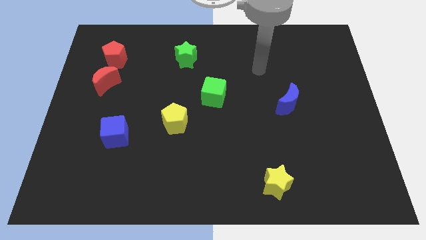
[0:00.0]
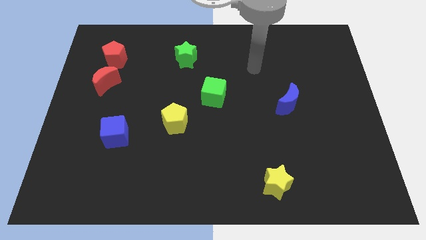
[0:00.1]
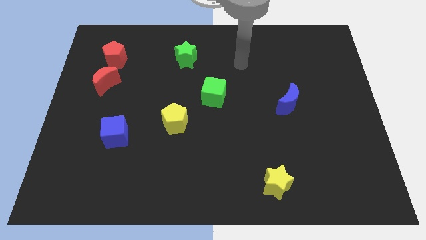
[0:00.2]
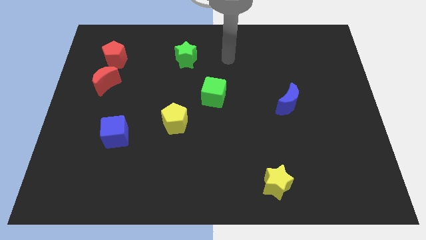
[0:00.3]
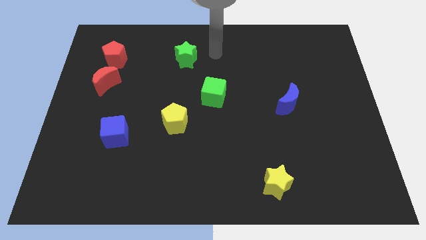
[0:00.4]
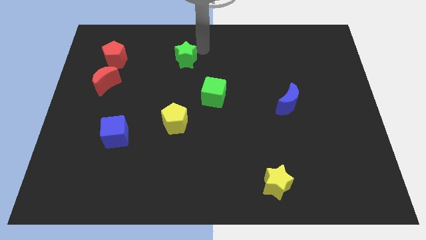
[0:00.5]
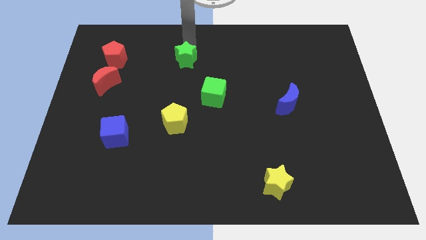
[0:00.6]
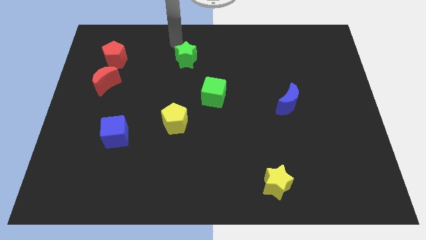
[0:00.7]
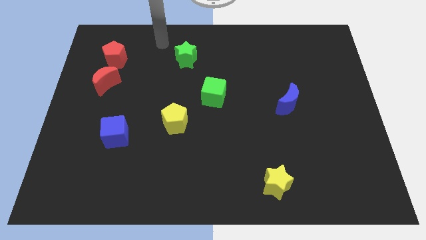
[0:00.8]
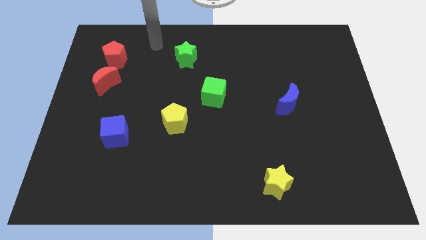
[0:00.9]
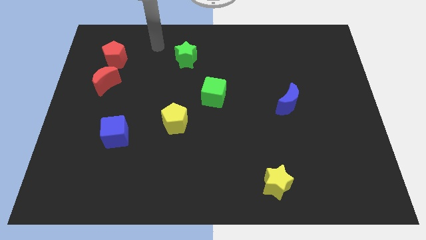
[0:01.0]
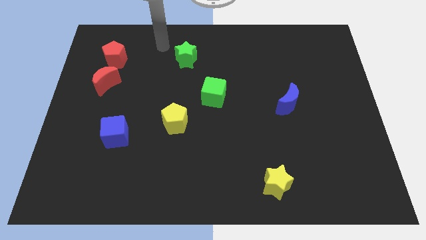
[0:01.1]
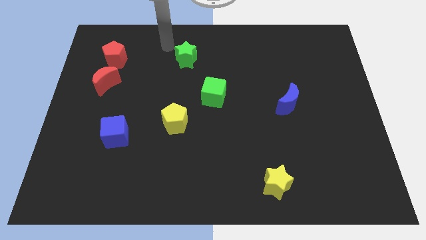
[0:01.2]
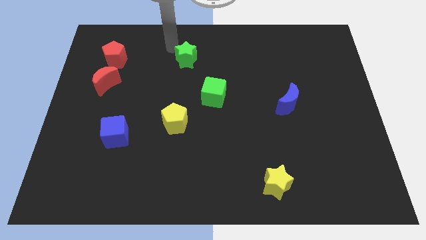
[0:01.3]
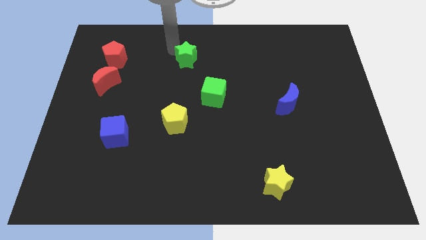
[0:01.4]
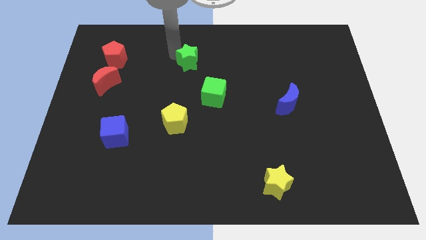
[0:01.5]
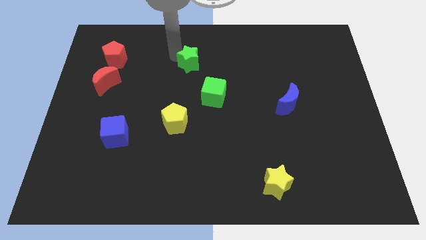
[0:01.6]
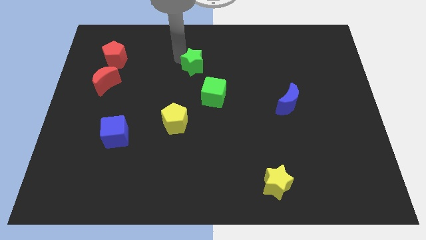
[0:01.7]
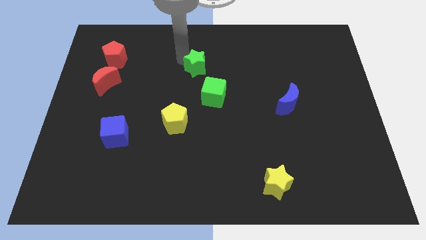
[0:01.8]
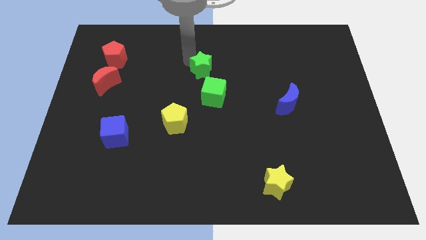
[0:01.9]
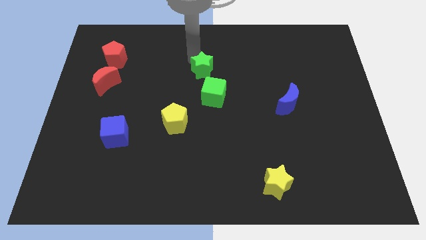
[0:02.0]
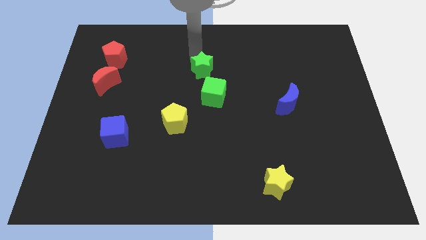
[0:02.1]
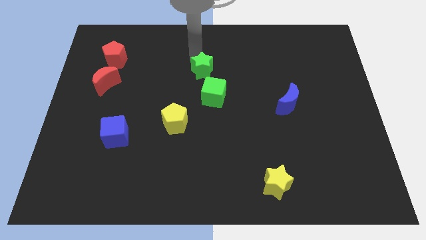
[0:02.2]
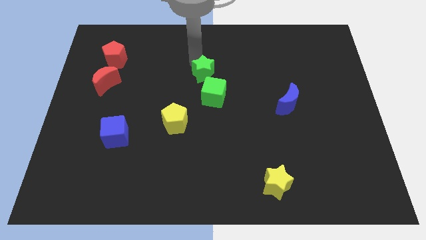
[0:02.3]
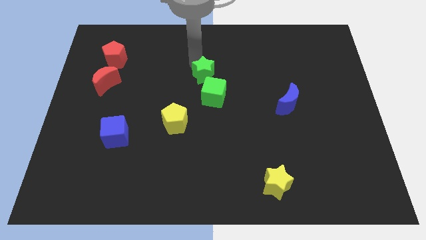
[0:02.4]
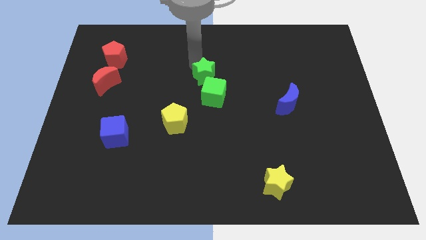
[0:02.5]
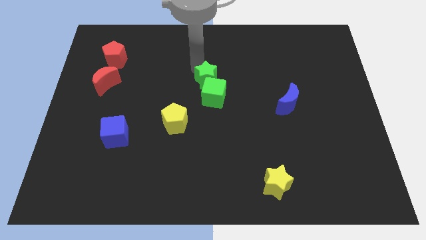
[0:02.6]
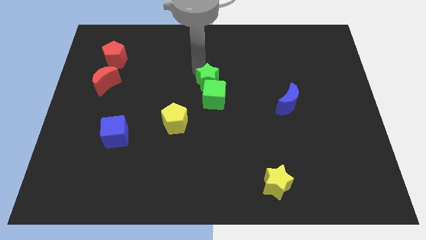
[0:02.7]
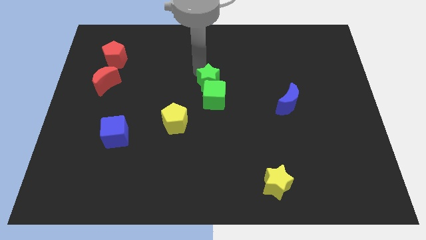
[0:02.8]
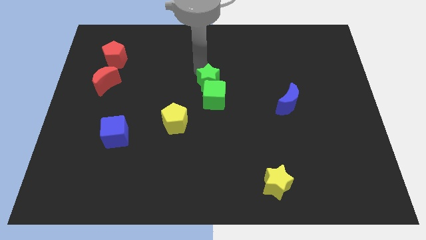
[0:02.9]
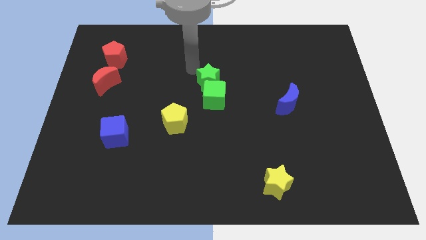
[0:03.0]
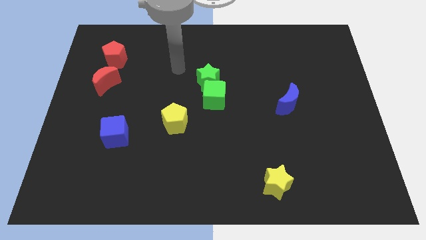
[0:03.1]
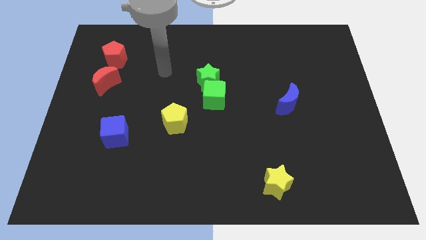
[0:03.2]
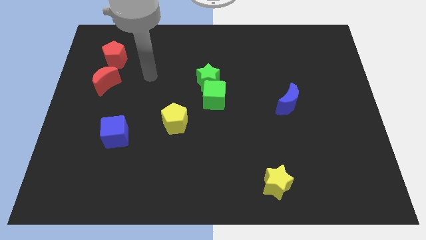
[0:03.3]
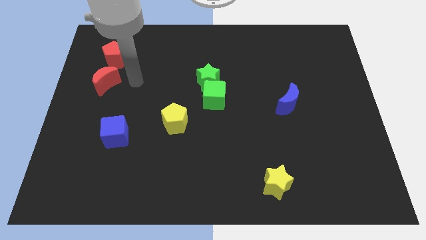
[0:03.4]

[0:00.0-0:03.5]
place green star to the top of green cube

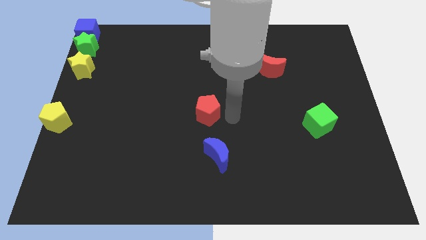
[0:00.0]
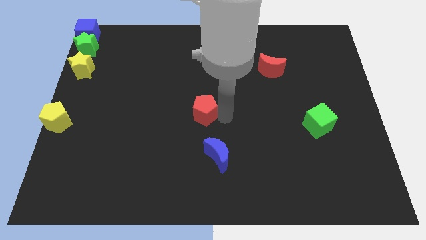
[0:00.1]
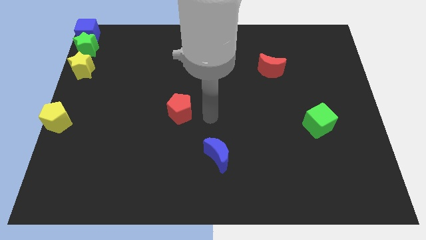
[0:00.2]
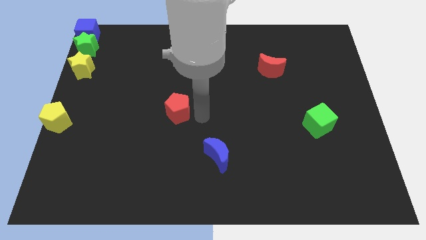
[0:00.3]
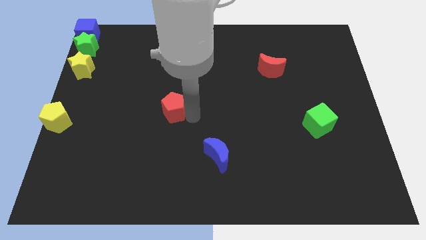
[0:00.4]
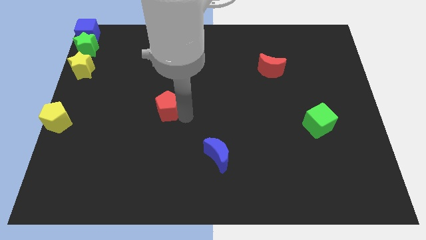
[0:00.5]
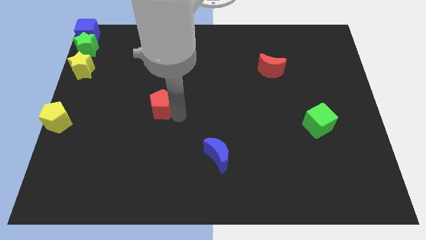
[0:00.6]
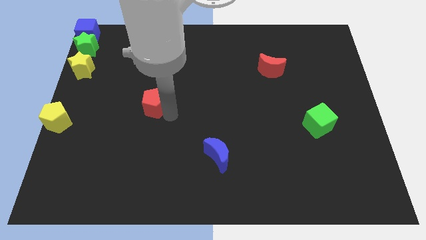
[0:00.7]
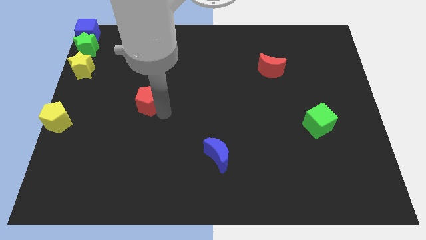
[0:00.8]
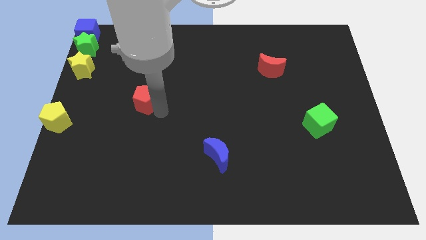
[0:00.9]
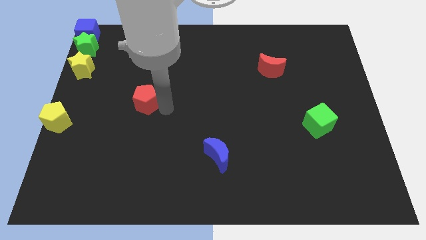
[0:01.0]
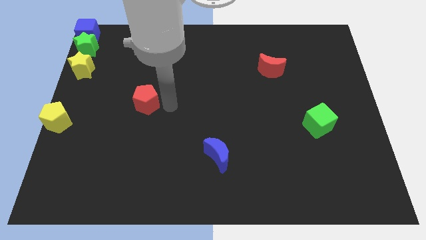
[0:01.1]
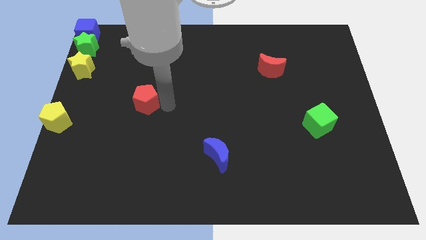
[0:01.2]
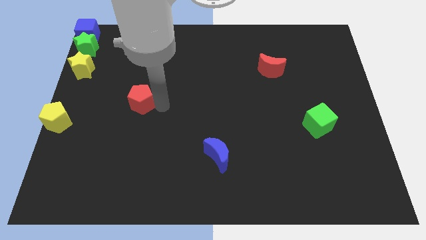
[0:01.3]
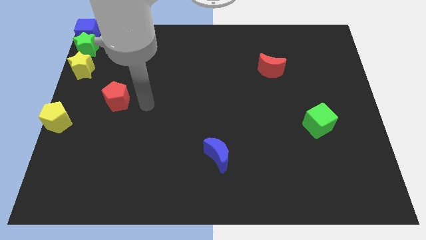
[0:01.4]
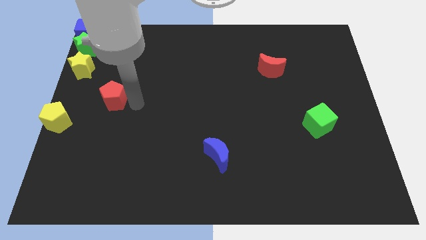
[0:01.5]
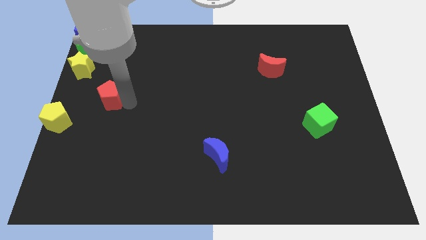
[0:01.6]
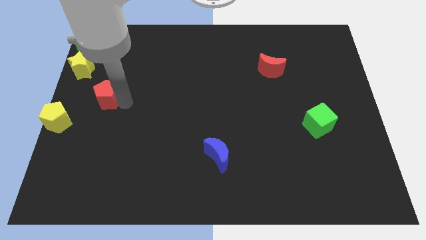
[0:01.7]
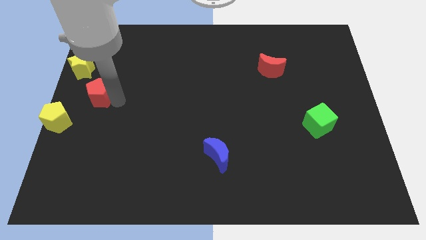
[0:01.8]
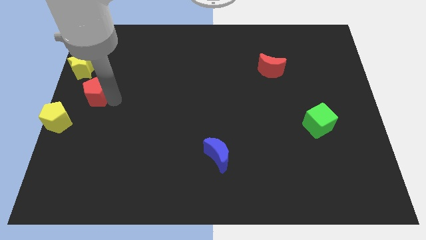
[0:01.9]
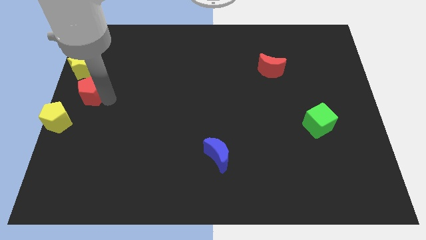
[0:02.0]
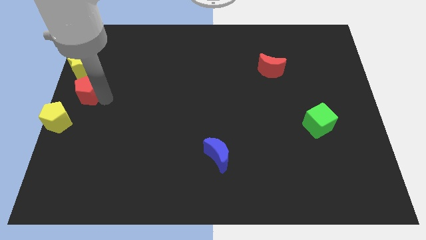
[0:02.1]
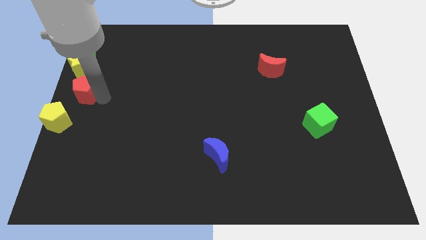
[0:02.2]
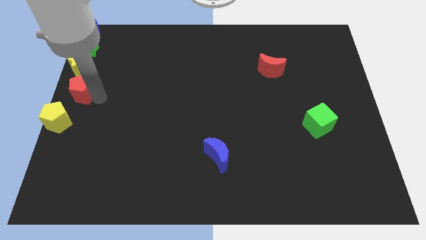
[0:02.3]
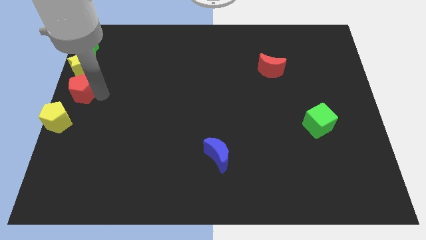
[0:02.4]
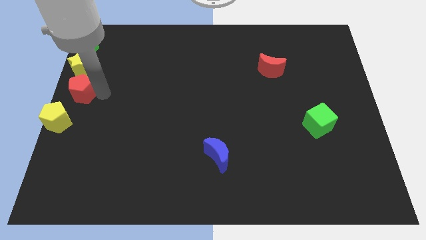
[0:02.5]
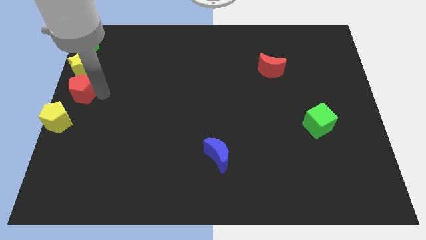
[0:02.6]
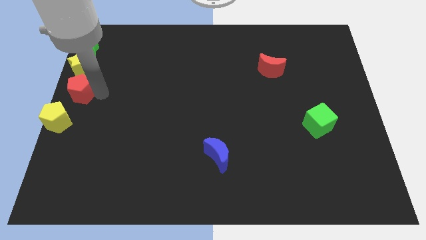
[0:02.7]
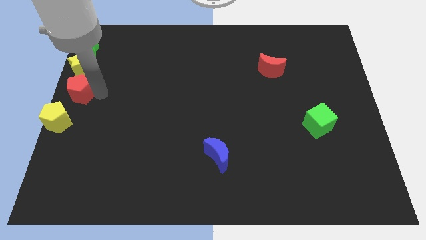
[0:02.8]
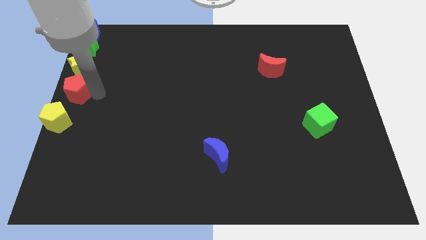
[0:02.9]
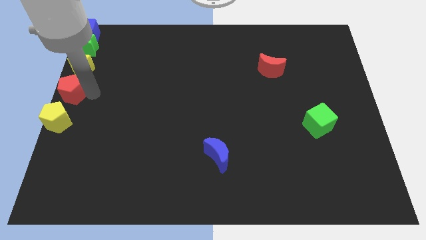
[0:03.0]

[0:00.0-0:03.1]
place the red pentagon between yellow star and yellow pentagon

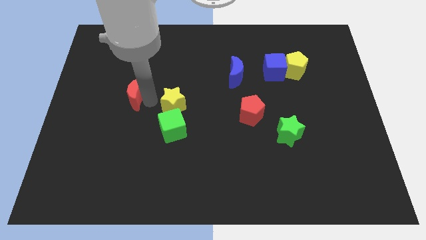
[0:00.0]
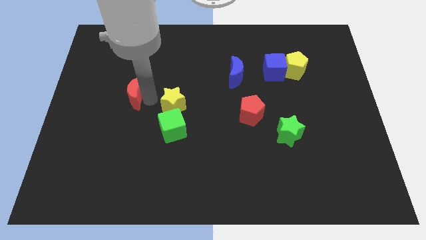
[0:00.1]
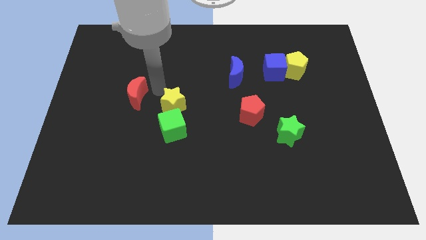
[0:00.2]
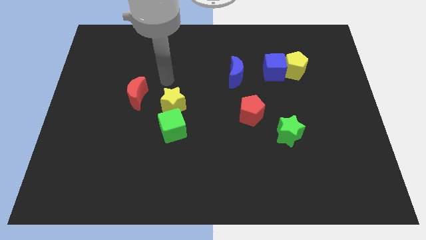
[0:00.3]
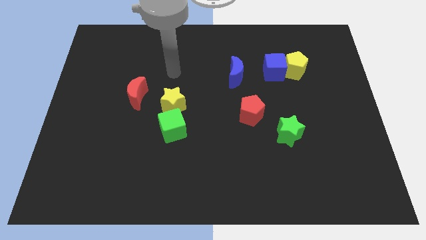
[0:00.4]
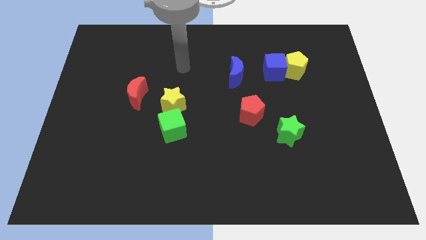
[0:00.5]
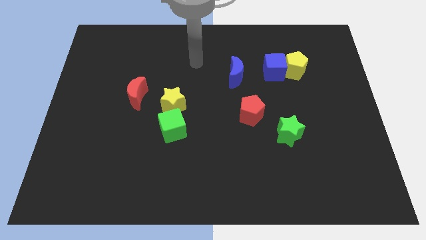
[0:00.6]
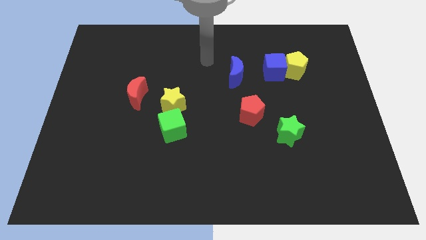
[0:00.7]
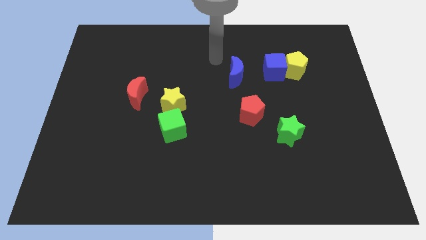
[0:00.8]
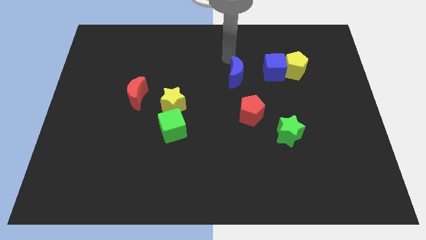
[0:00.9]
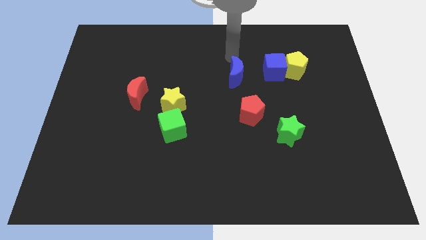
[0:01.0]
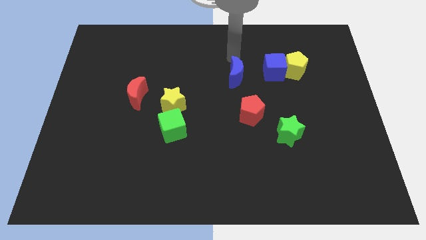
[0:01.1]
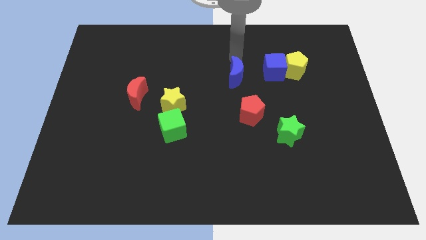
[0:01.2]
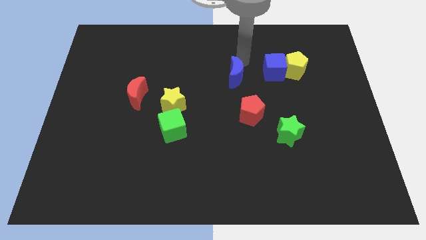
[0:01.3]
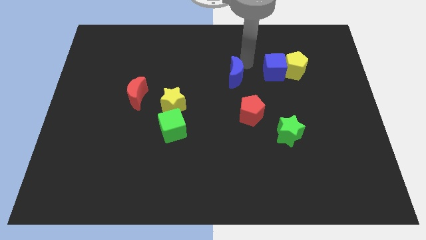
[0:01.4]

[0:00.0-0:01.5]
go near the blue moon

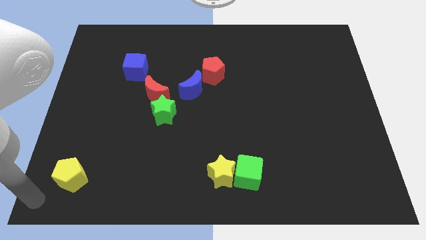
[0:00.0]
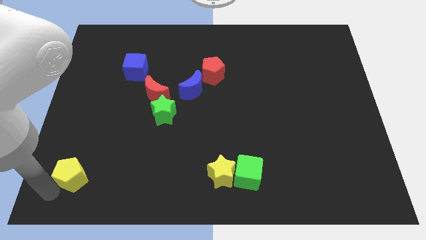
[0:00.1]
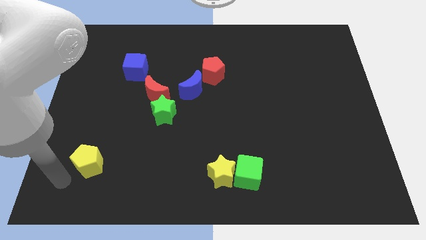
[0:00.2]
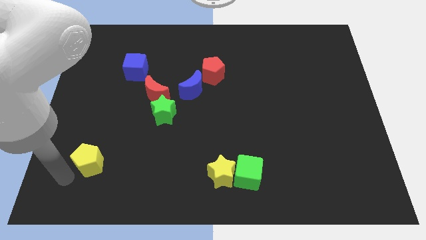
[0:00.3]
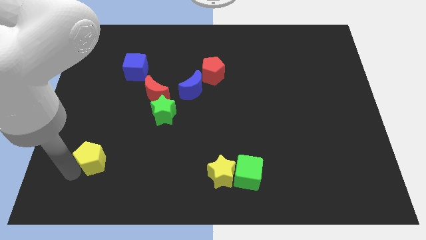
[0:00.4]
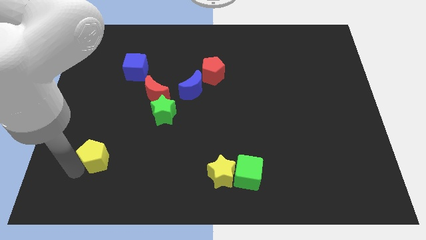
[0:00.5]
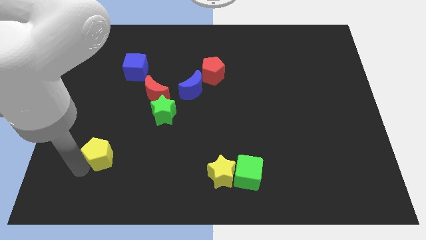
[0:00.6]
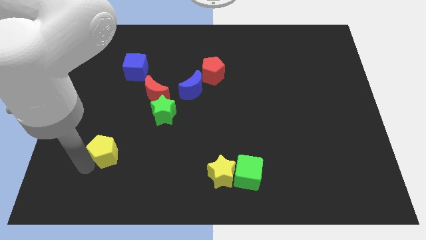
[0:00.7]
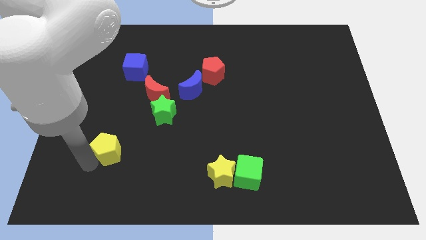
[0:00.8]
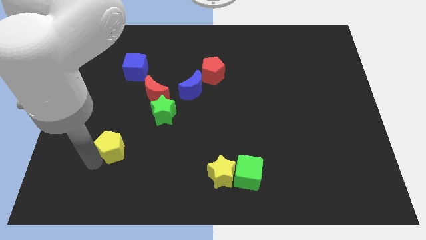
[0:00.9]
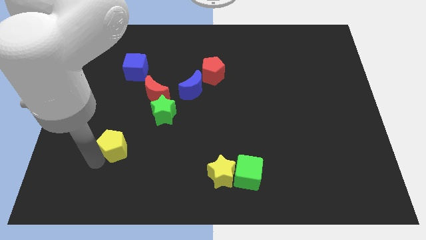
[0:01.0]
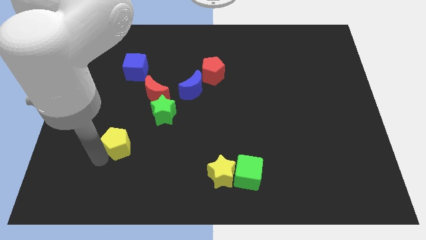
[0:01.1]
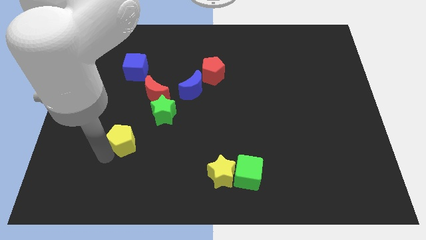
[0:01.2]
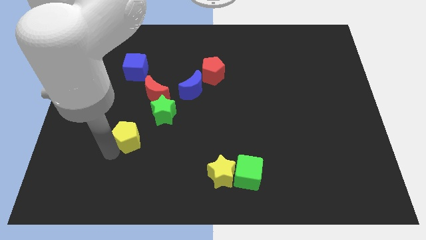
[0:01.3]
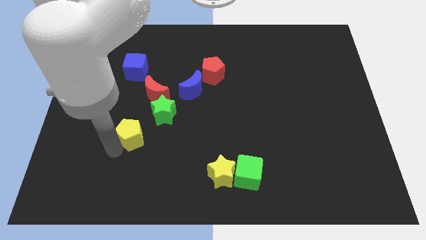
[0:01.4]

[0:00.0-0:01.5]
drag the yellow pentagon towards the diagonal bottom left corner of the green star
